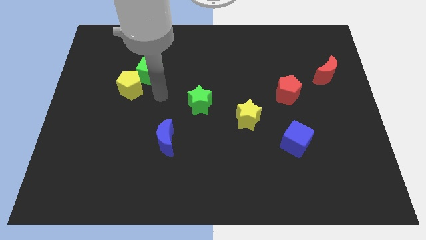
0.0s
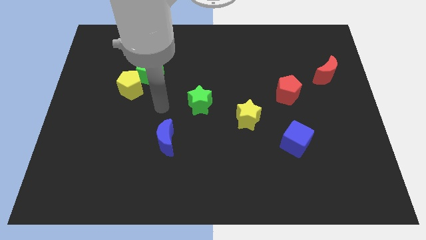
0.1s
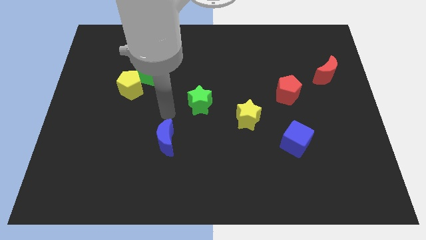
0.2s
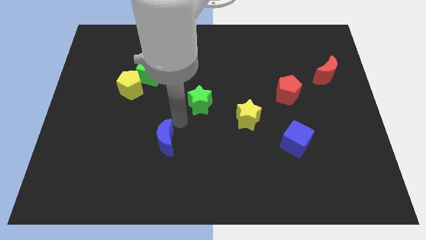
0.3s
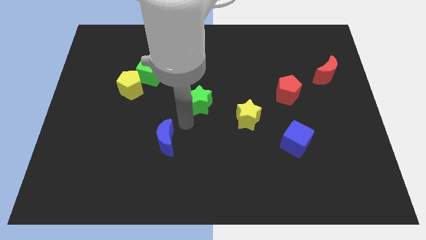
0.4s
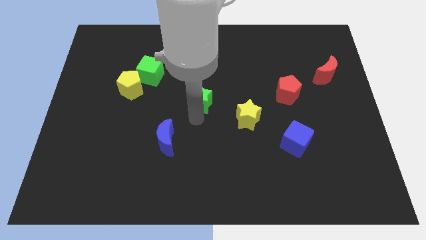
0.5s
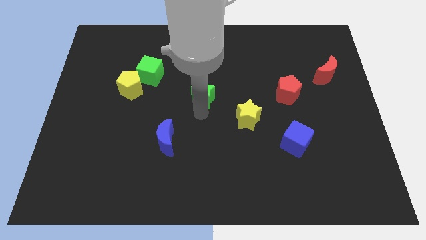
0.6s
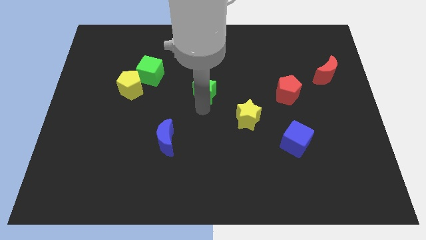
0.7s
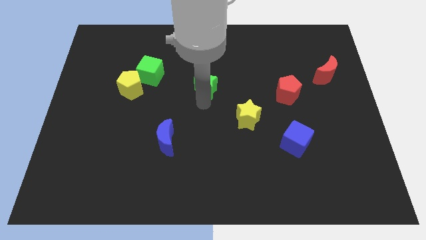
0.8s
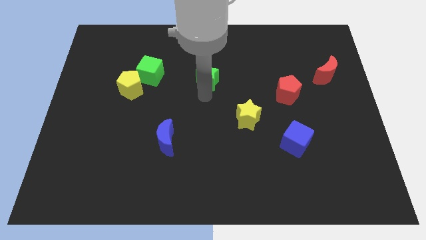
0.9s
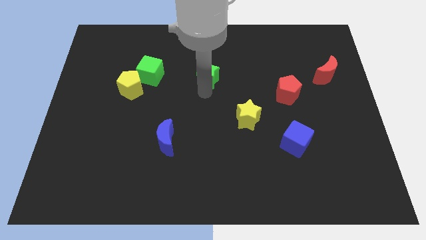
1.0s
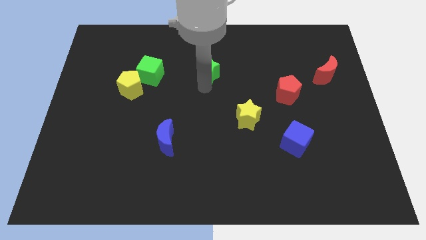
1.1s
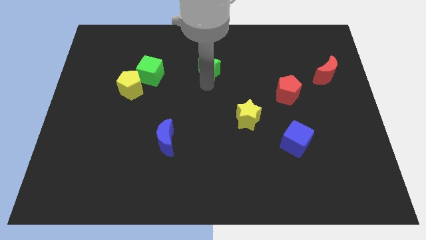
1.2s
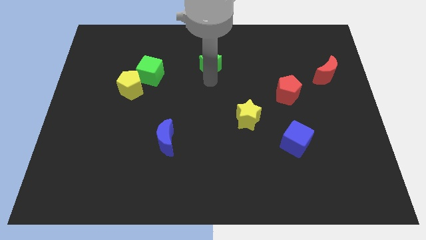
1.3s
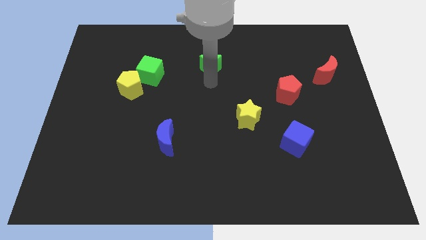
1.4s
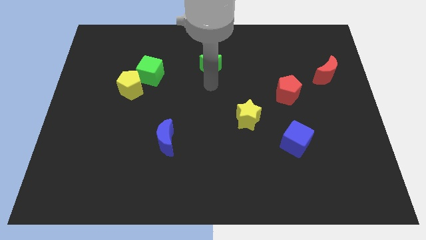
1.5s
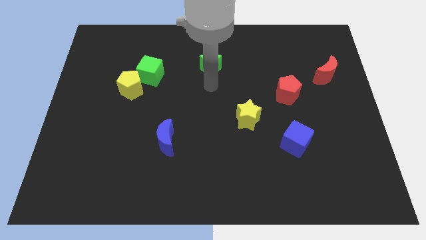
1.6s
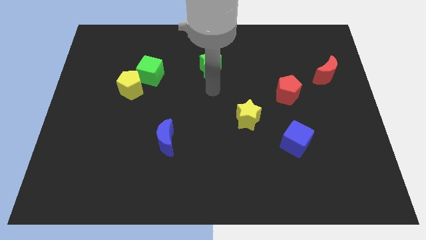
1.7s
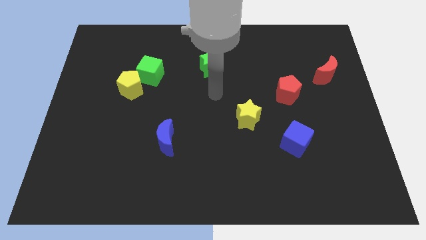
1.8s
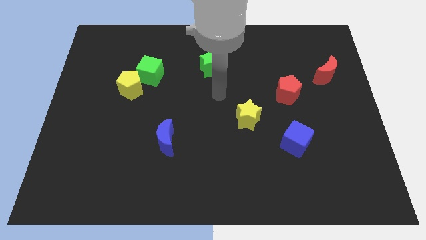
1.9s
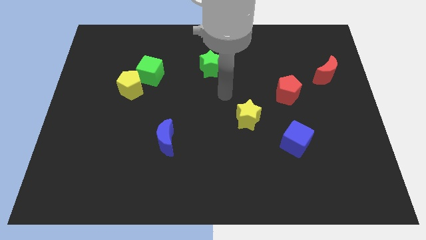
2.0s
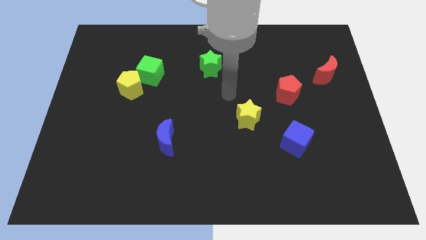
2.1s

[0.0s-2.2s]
slide the green star towards up

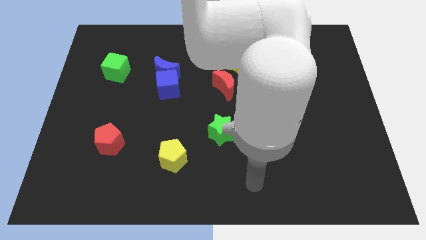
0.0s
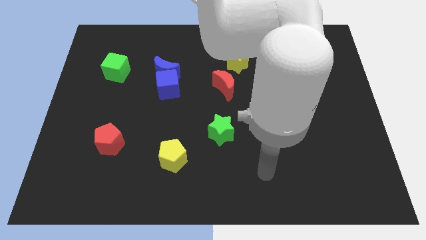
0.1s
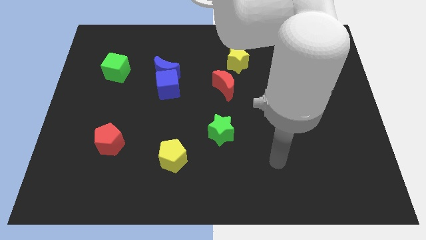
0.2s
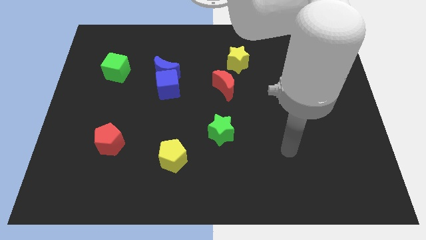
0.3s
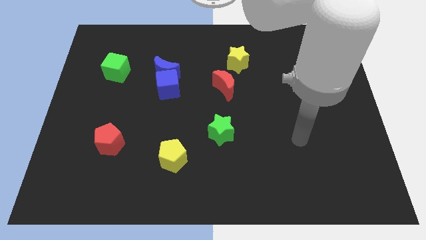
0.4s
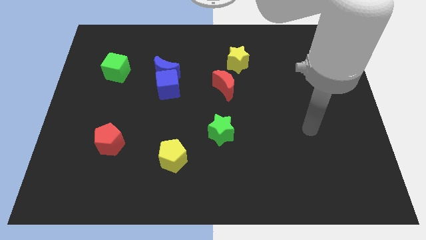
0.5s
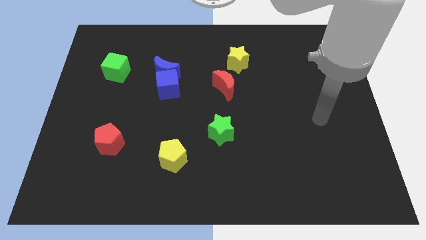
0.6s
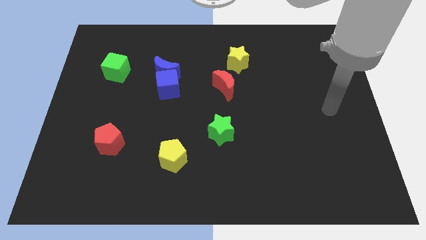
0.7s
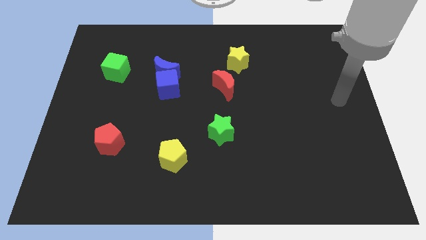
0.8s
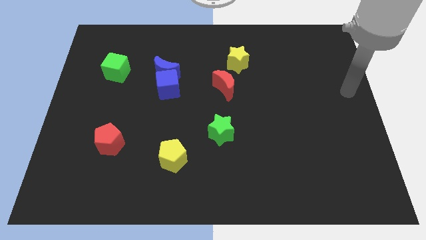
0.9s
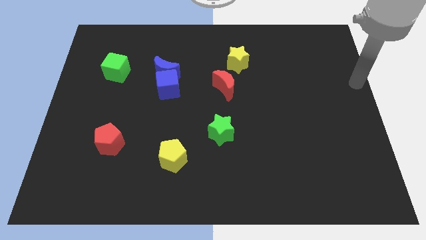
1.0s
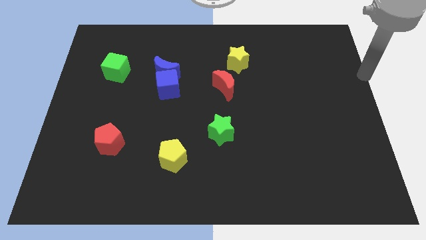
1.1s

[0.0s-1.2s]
move the arm towards the top right center of the board

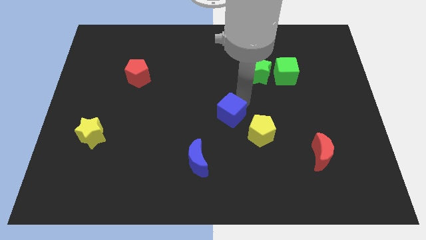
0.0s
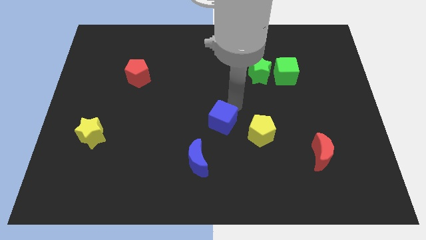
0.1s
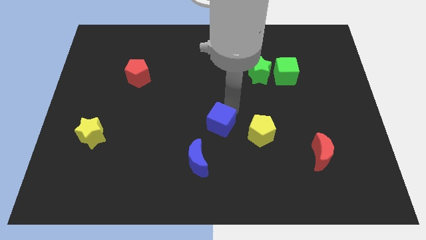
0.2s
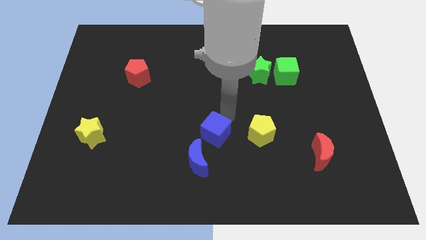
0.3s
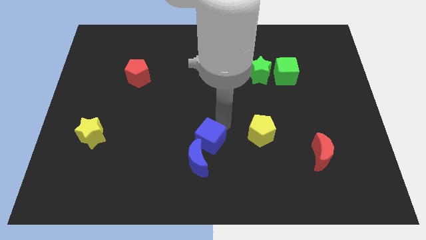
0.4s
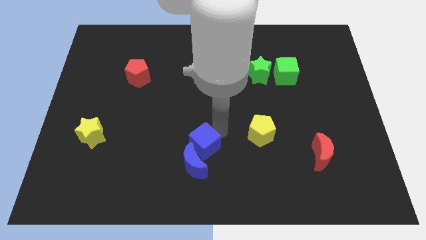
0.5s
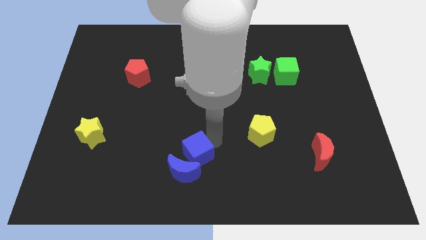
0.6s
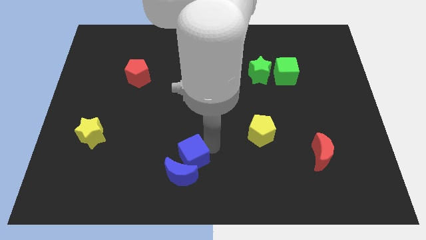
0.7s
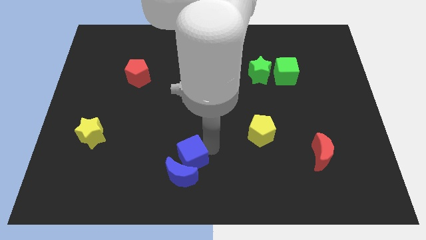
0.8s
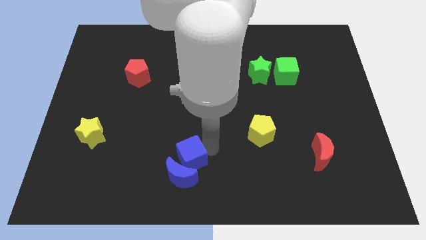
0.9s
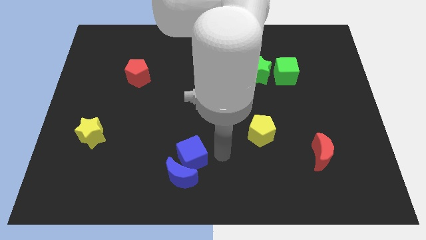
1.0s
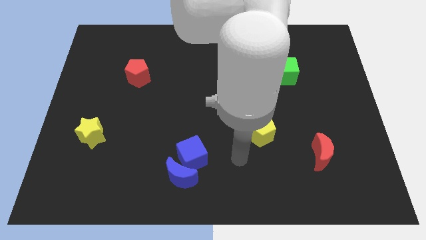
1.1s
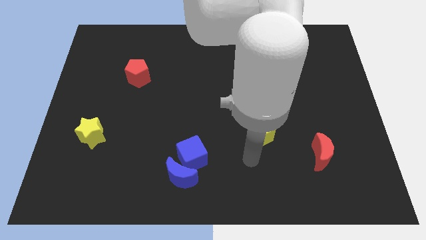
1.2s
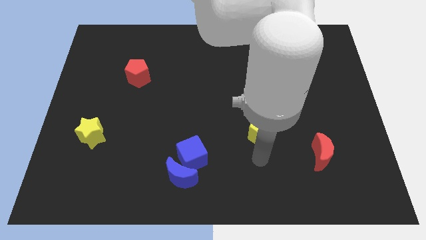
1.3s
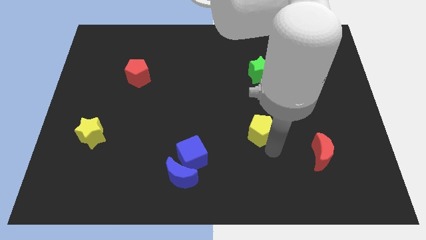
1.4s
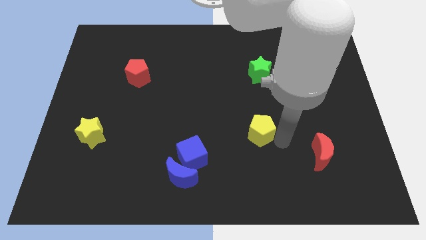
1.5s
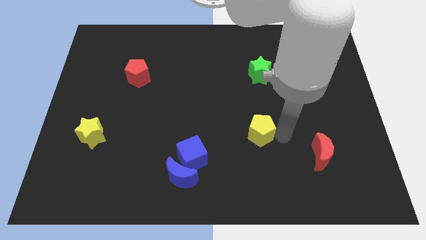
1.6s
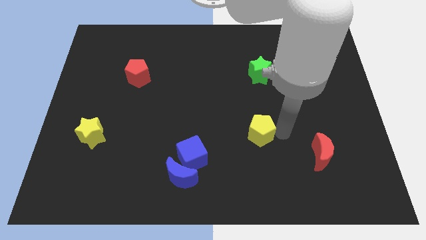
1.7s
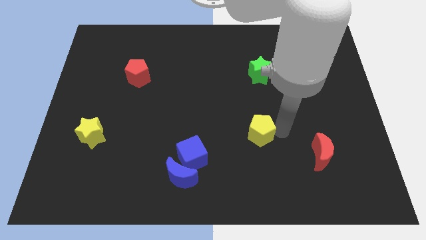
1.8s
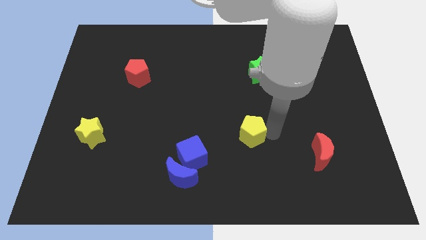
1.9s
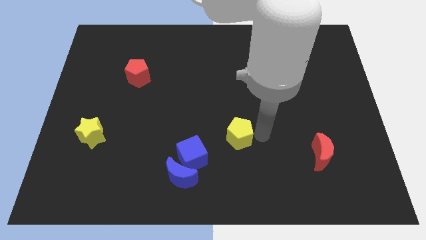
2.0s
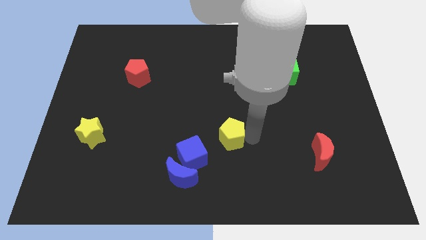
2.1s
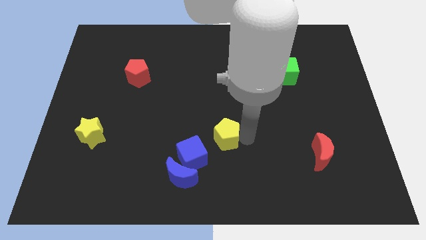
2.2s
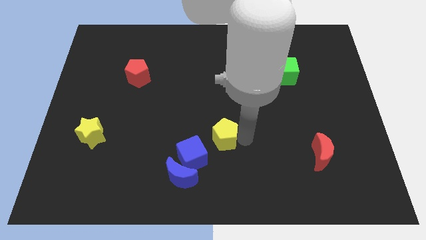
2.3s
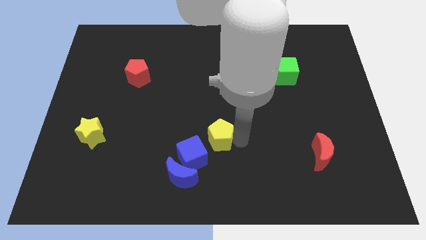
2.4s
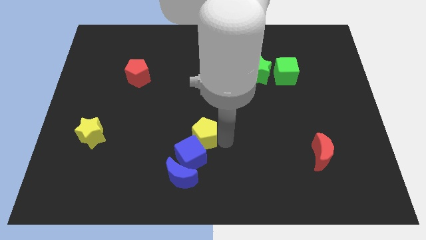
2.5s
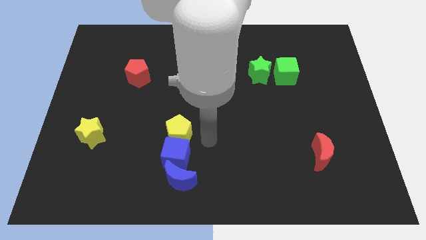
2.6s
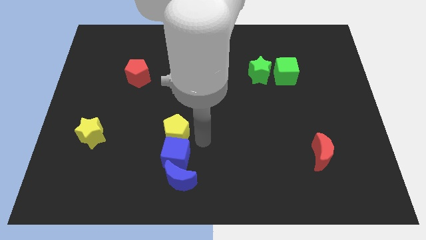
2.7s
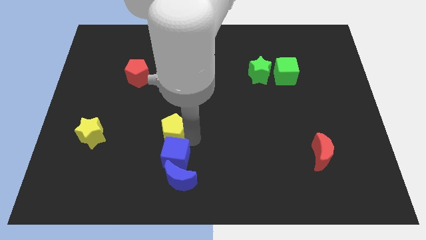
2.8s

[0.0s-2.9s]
push yellow pentagon above blue cube

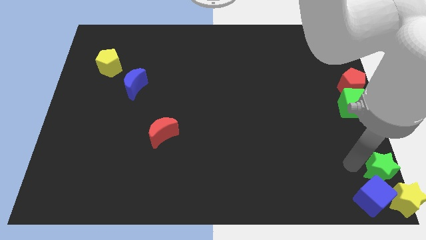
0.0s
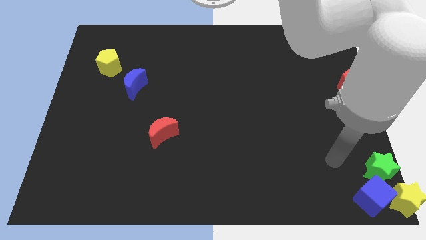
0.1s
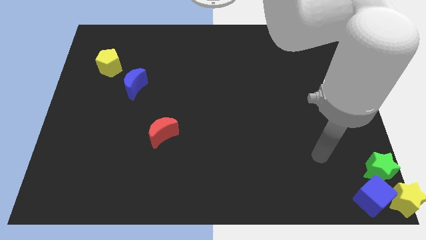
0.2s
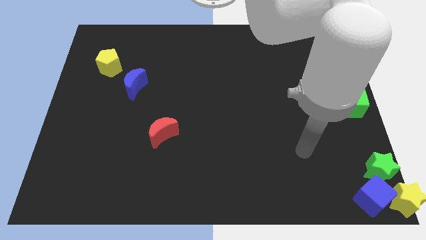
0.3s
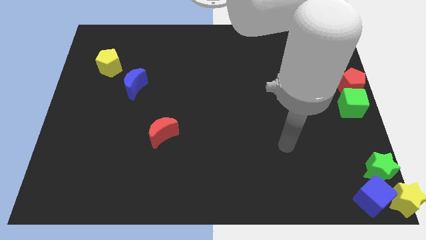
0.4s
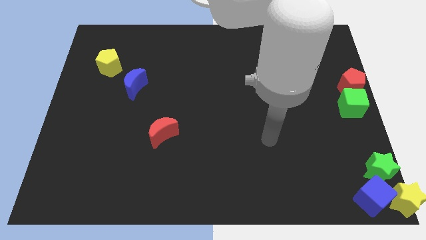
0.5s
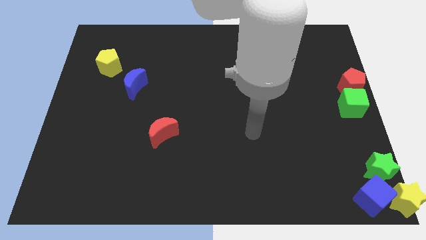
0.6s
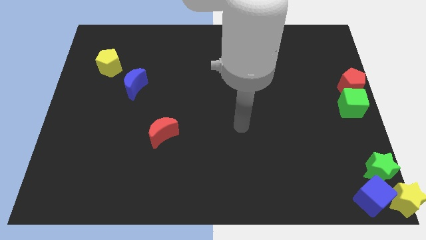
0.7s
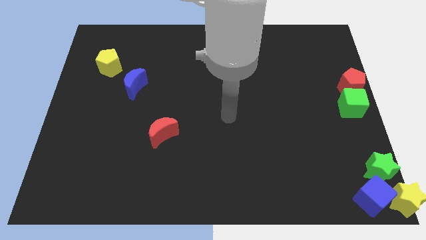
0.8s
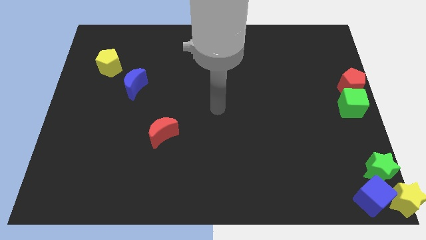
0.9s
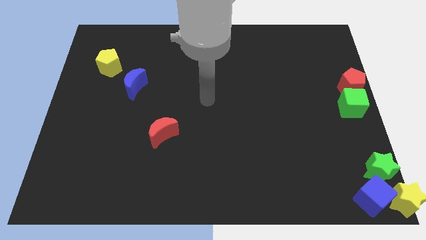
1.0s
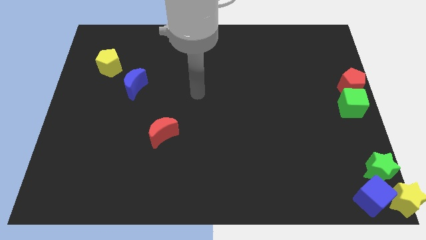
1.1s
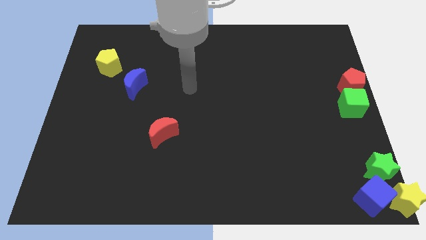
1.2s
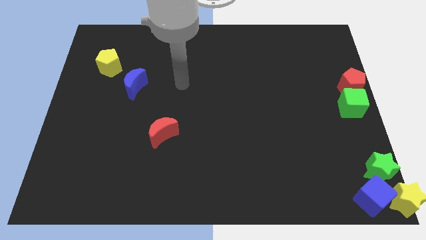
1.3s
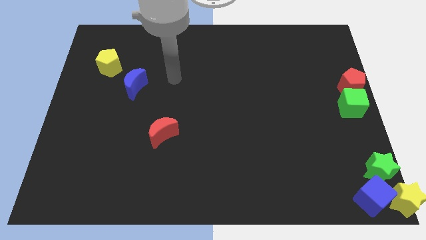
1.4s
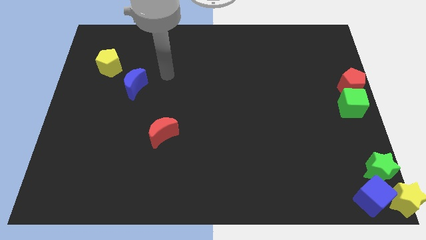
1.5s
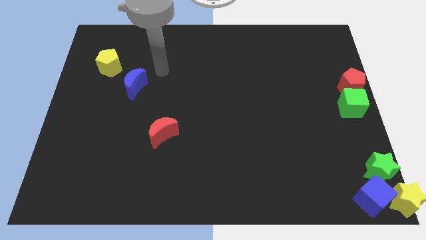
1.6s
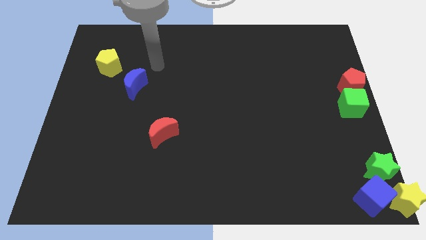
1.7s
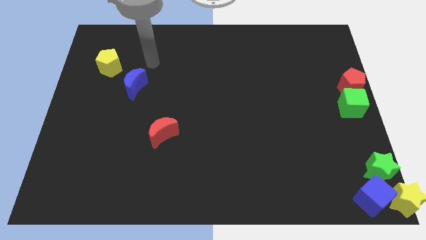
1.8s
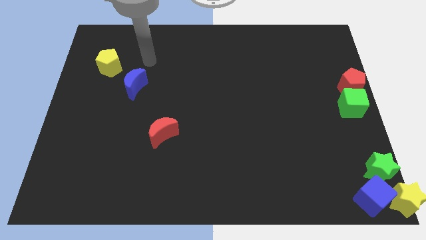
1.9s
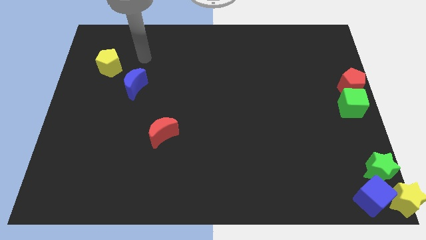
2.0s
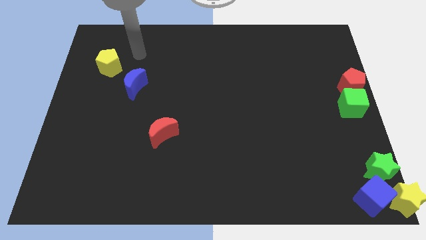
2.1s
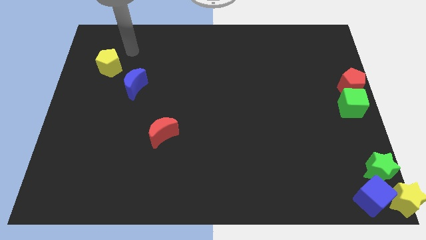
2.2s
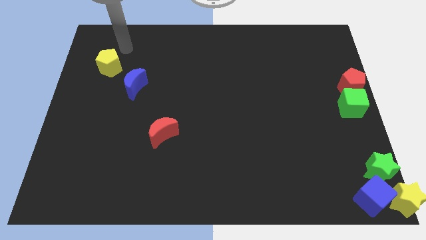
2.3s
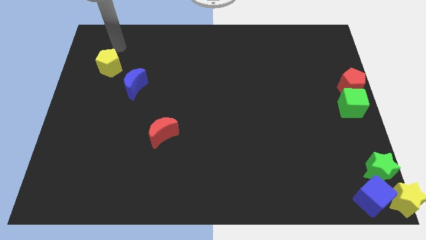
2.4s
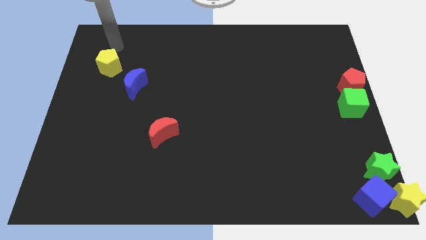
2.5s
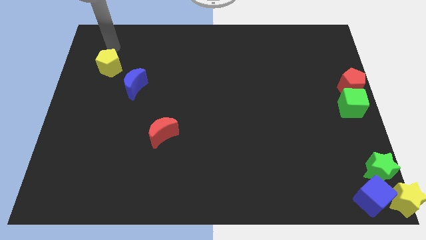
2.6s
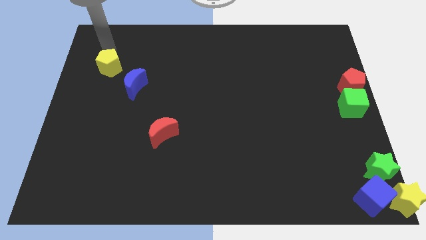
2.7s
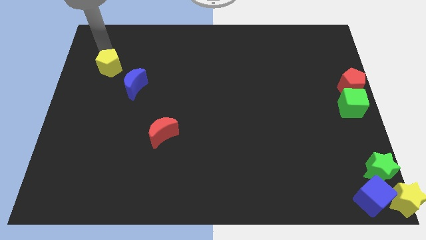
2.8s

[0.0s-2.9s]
move the arm towards the yellow pentagon

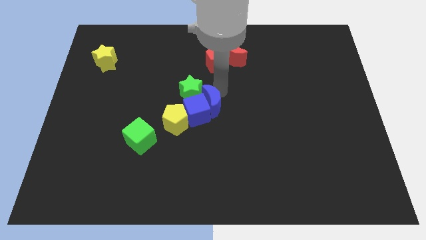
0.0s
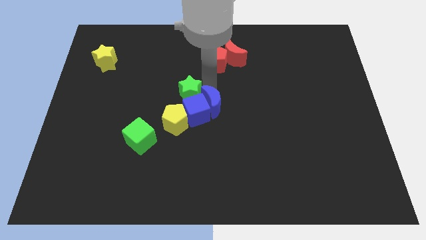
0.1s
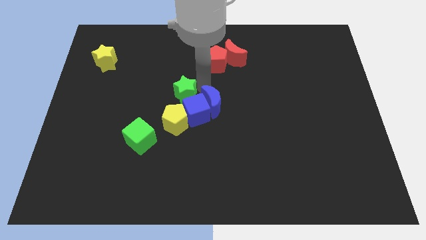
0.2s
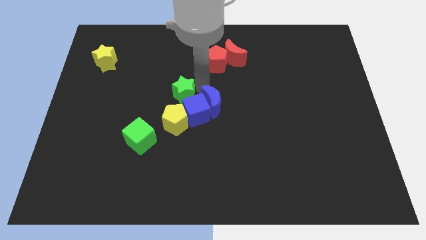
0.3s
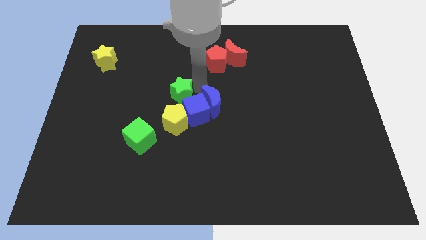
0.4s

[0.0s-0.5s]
place your arm right to the green star
